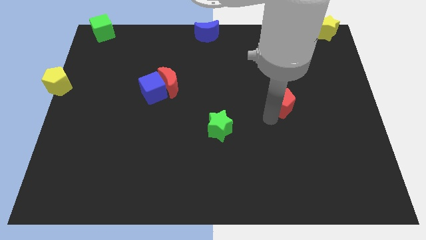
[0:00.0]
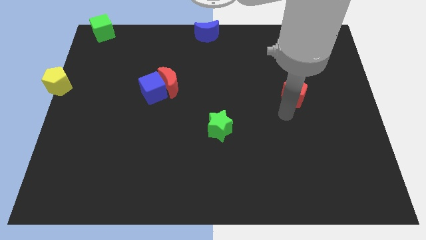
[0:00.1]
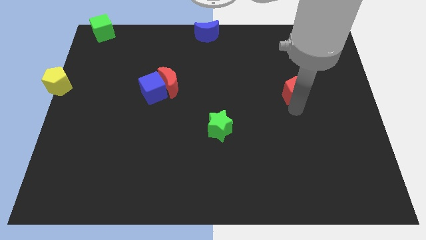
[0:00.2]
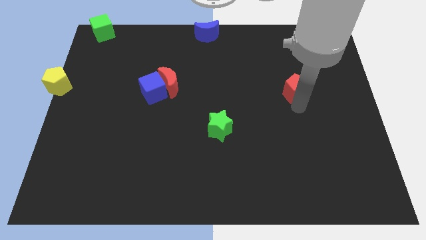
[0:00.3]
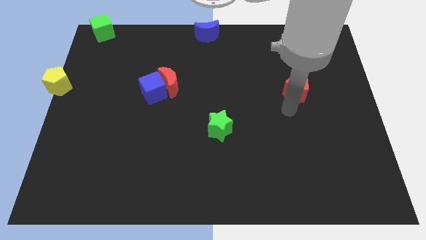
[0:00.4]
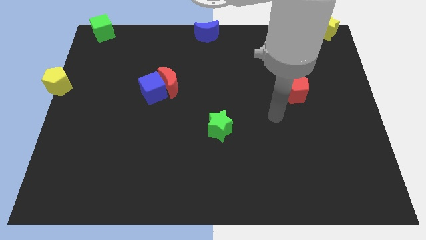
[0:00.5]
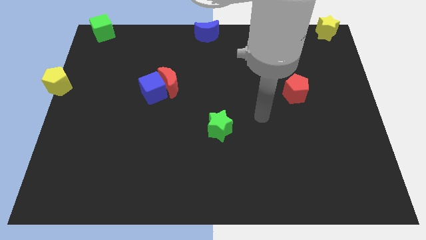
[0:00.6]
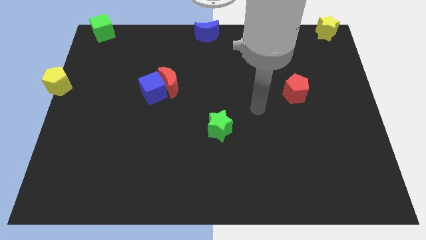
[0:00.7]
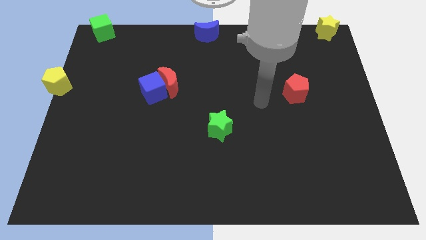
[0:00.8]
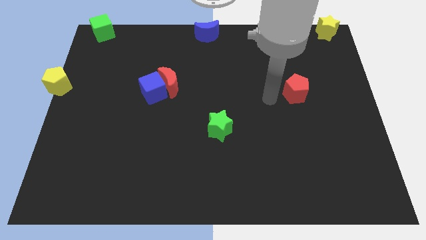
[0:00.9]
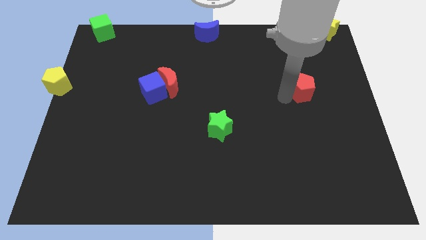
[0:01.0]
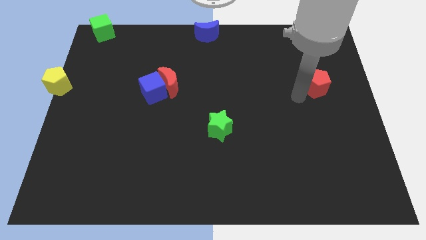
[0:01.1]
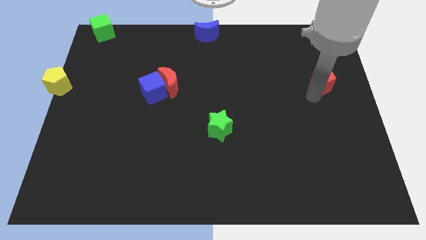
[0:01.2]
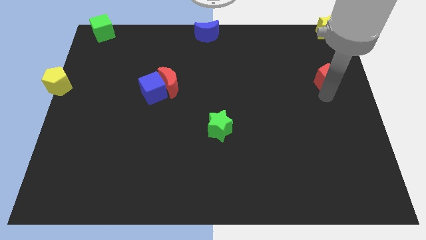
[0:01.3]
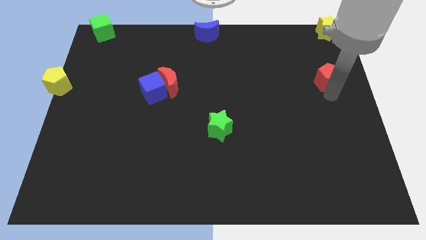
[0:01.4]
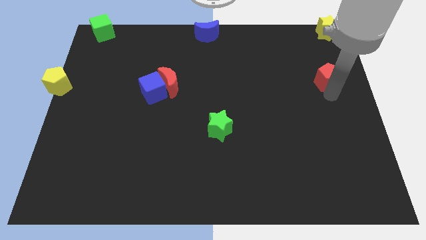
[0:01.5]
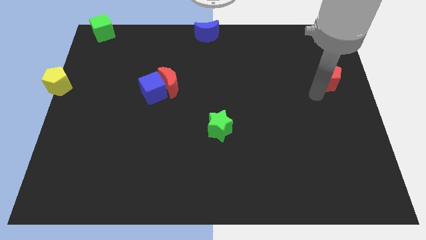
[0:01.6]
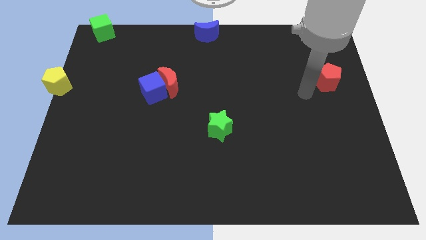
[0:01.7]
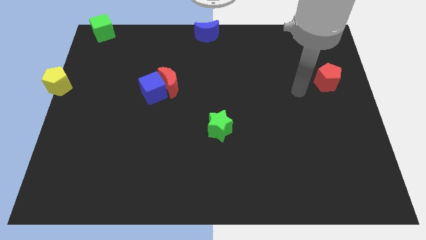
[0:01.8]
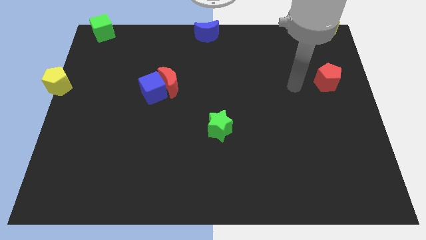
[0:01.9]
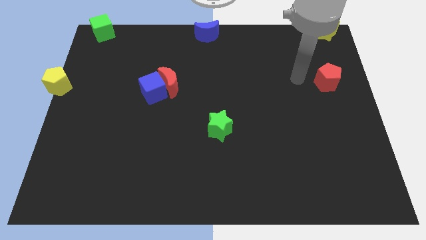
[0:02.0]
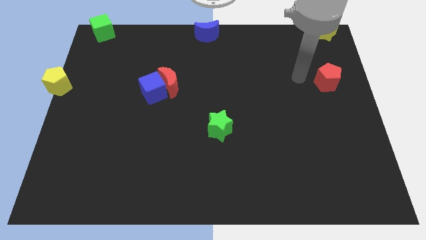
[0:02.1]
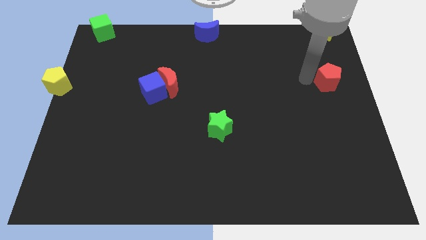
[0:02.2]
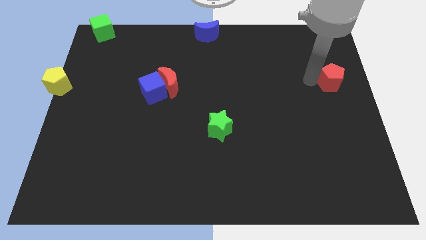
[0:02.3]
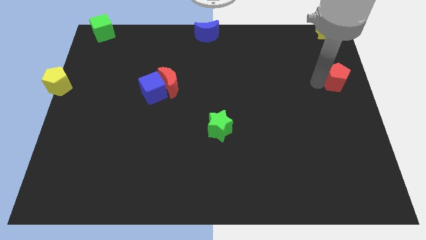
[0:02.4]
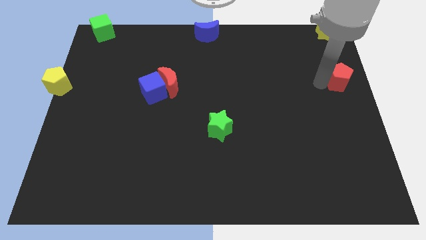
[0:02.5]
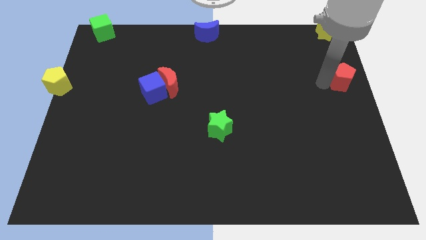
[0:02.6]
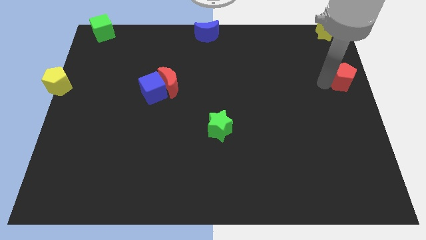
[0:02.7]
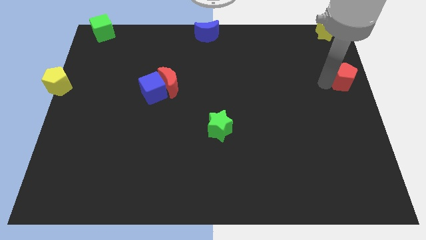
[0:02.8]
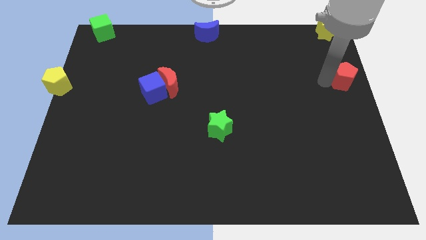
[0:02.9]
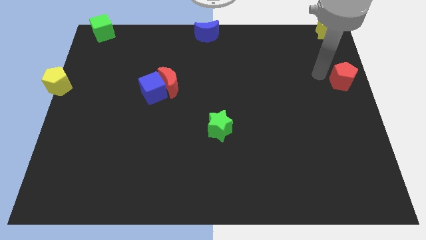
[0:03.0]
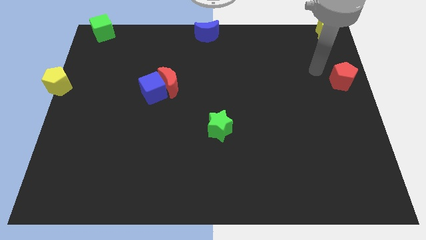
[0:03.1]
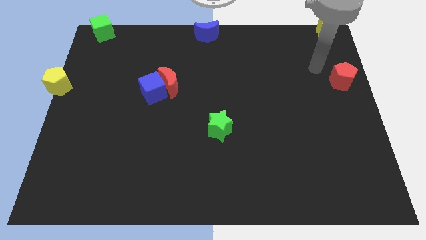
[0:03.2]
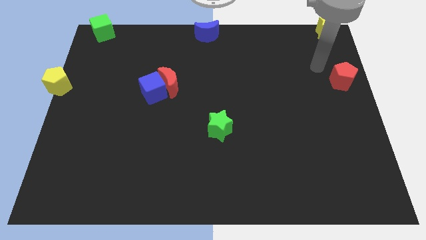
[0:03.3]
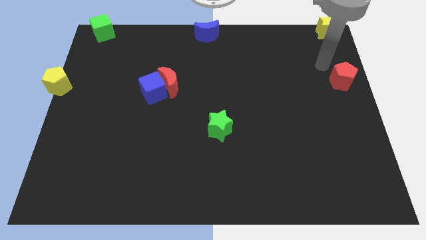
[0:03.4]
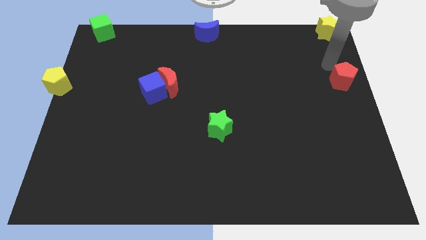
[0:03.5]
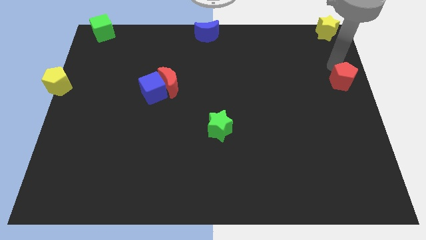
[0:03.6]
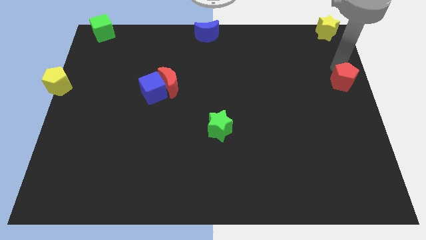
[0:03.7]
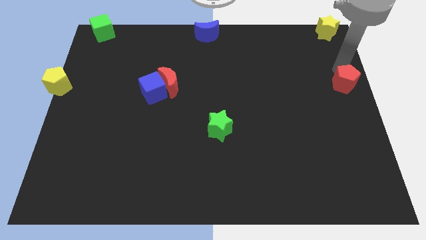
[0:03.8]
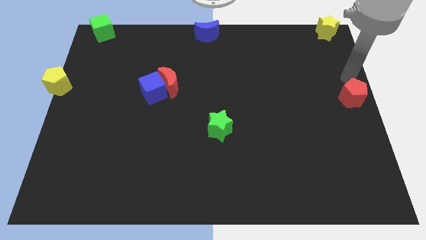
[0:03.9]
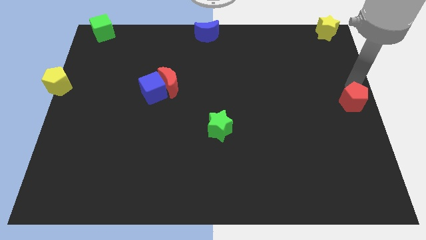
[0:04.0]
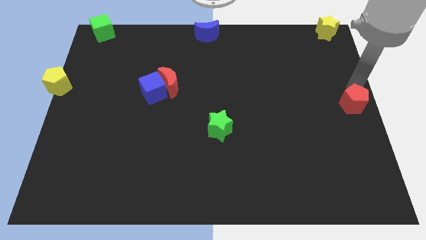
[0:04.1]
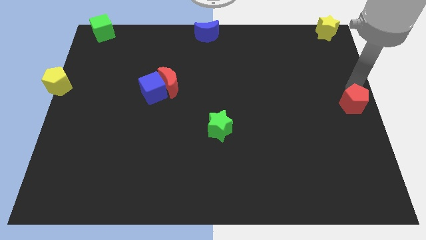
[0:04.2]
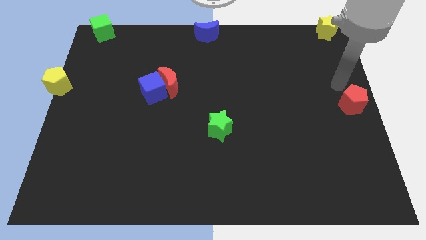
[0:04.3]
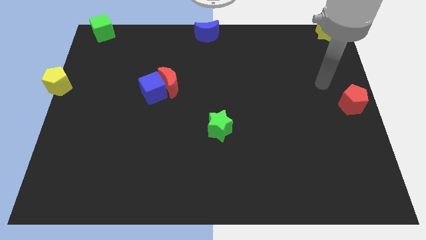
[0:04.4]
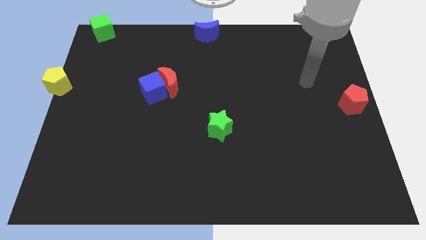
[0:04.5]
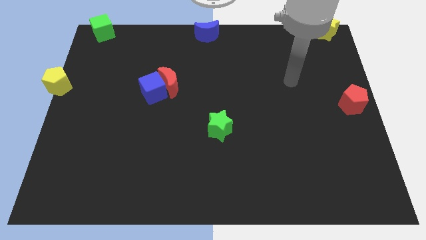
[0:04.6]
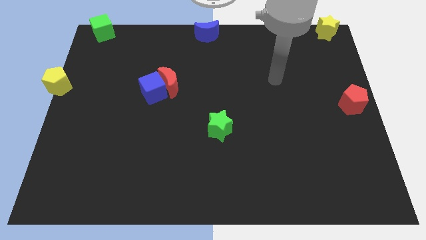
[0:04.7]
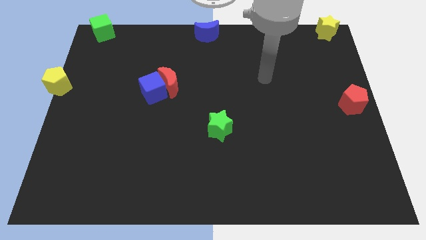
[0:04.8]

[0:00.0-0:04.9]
place the red pentagon at the center right side of the board

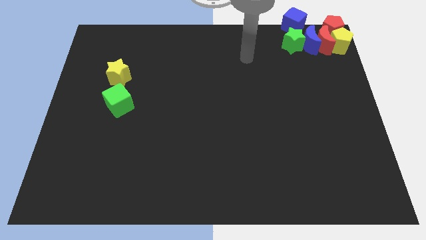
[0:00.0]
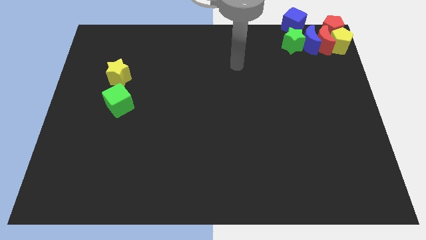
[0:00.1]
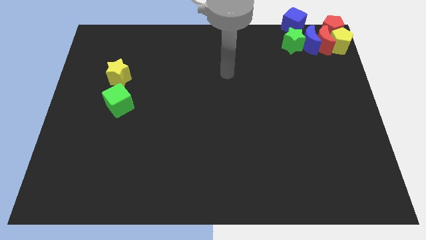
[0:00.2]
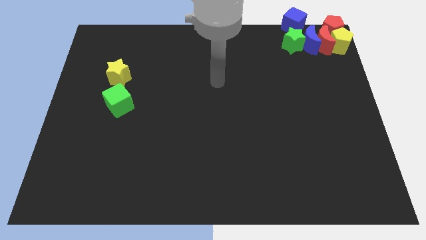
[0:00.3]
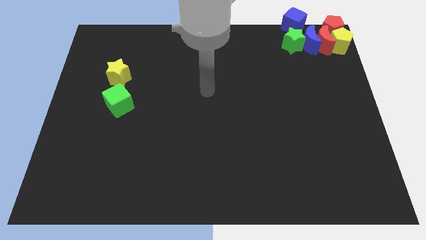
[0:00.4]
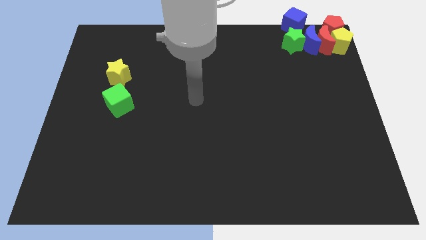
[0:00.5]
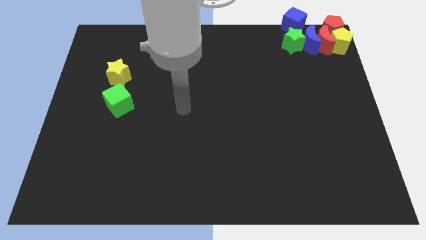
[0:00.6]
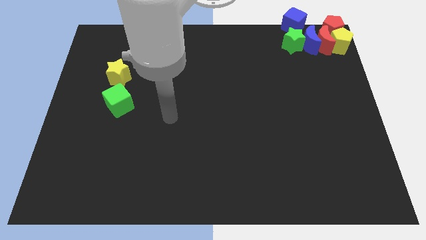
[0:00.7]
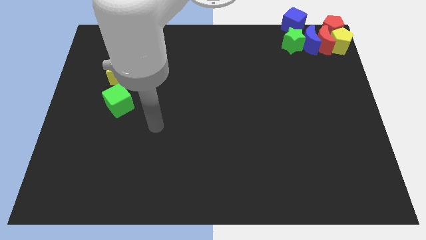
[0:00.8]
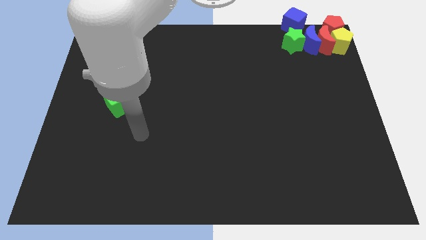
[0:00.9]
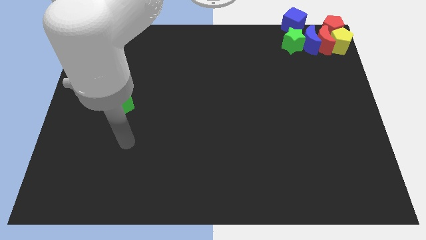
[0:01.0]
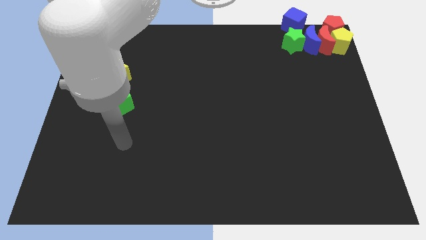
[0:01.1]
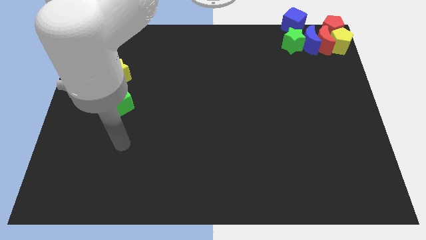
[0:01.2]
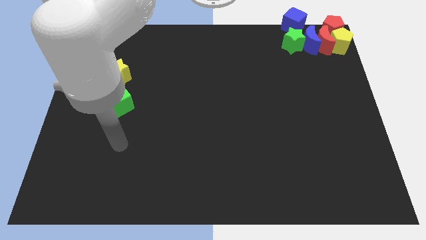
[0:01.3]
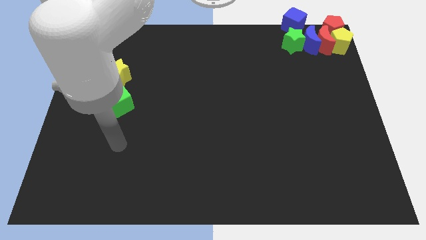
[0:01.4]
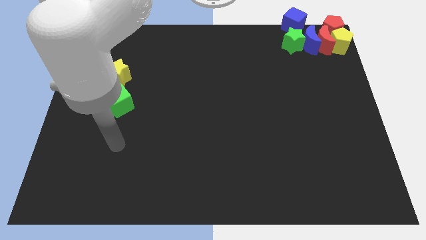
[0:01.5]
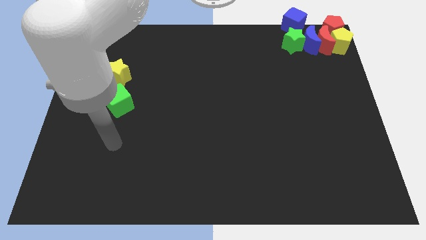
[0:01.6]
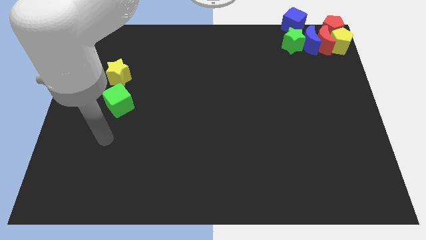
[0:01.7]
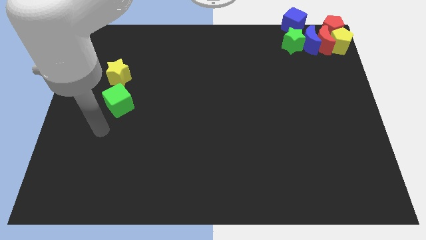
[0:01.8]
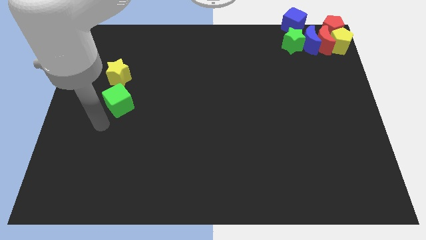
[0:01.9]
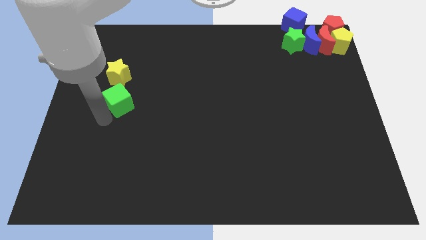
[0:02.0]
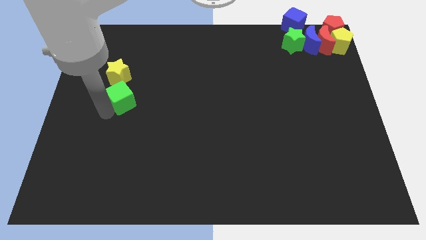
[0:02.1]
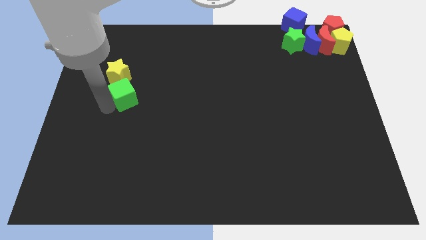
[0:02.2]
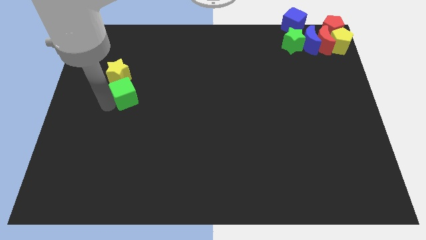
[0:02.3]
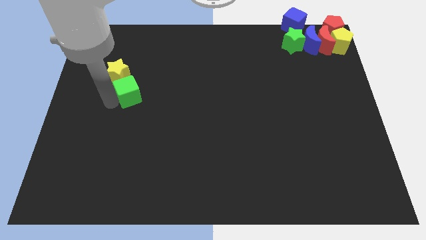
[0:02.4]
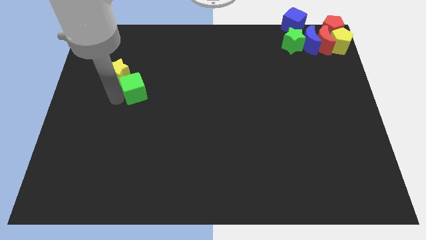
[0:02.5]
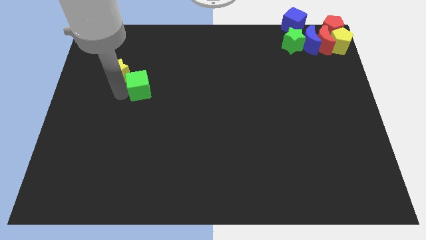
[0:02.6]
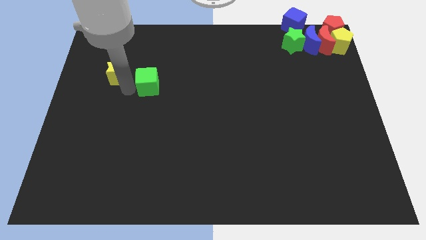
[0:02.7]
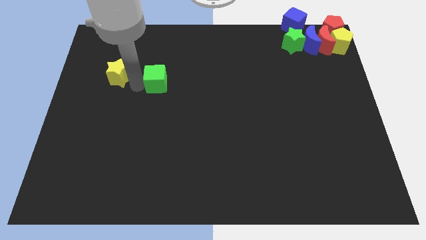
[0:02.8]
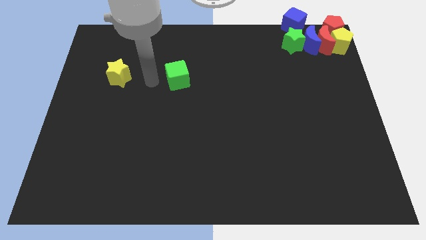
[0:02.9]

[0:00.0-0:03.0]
move your arm and push the green cube beside the yellow star

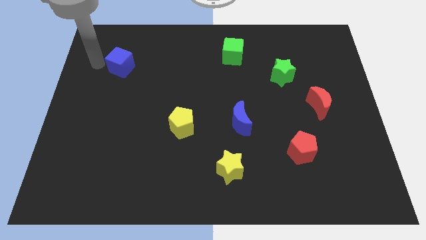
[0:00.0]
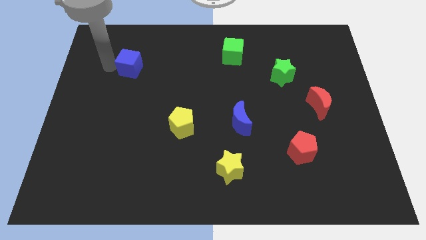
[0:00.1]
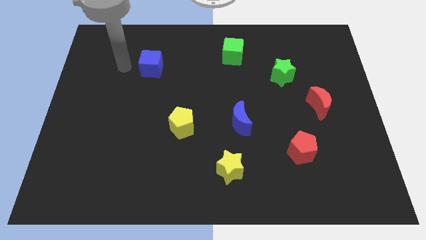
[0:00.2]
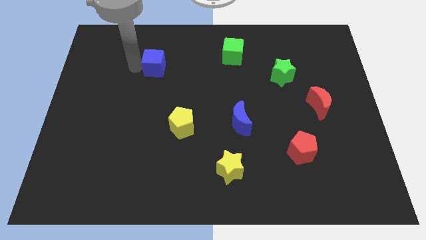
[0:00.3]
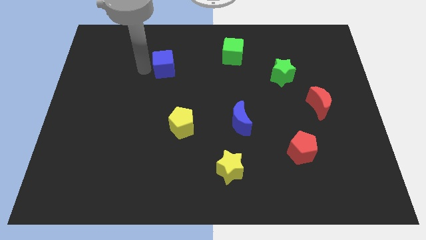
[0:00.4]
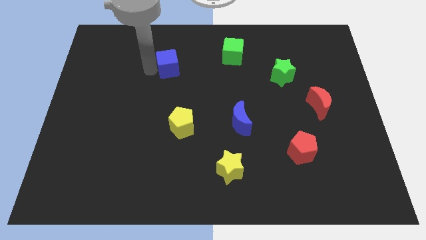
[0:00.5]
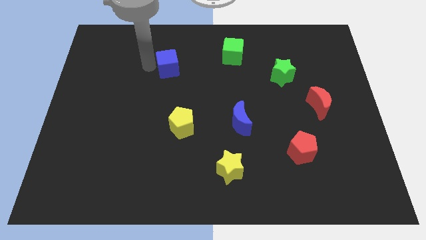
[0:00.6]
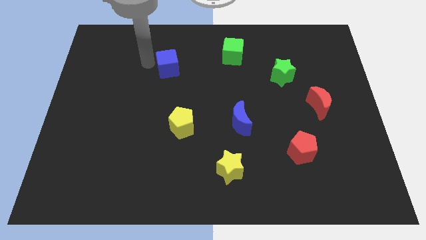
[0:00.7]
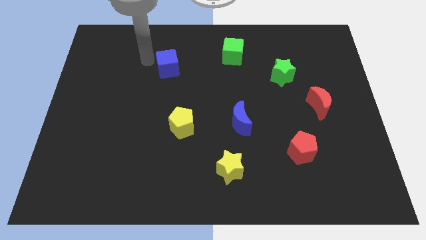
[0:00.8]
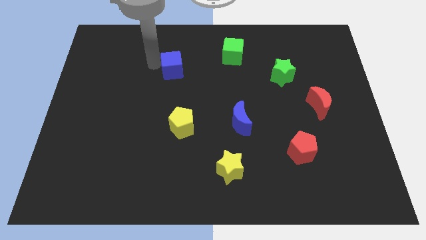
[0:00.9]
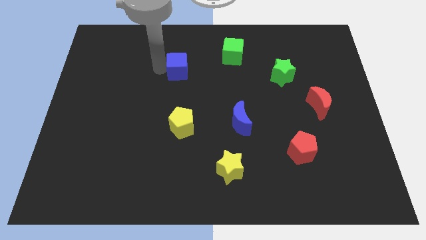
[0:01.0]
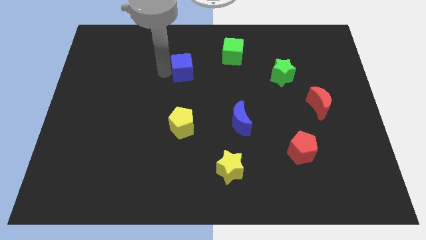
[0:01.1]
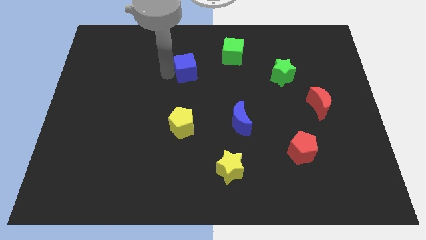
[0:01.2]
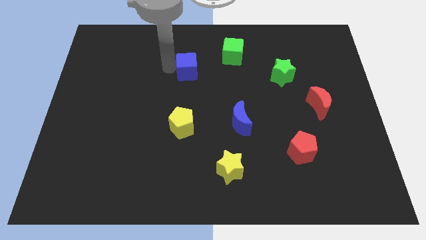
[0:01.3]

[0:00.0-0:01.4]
push the blue cube left to the green cube
